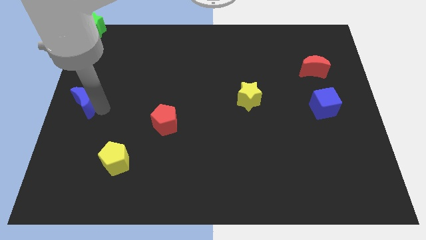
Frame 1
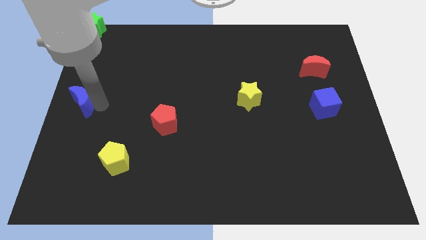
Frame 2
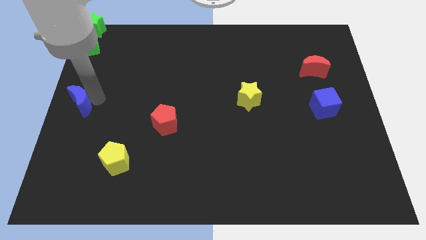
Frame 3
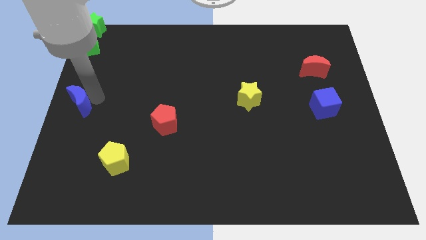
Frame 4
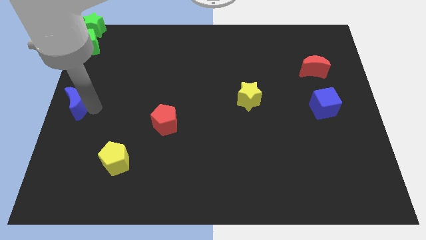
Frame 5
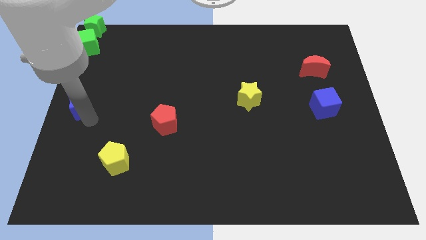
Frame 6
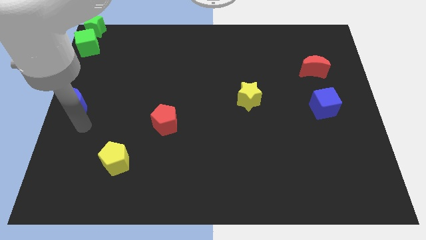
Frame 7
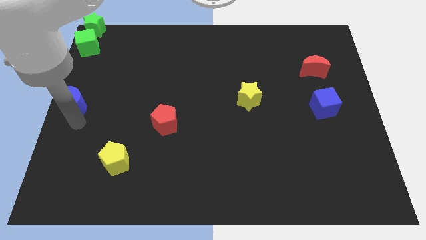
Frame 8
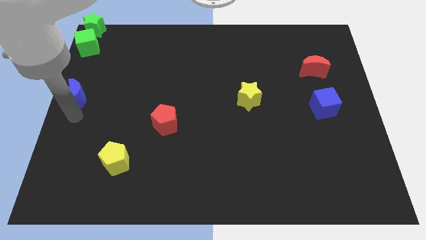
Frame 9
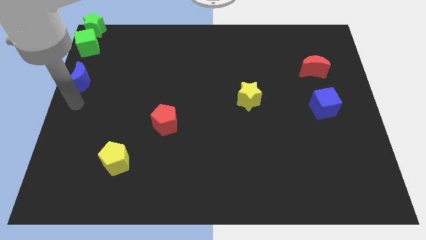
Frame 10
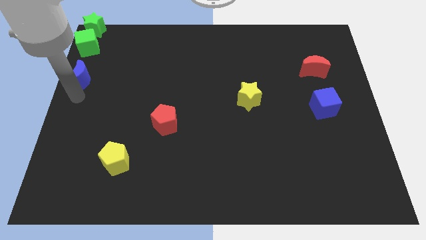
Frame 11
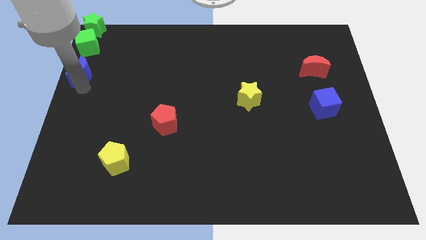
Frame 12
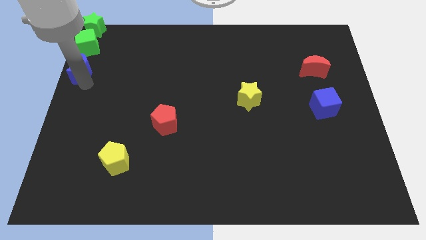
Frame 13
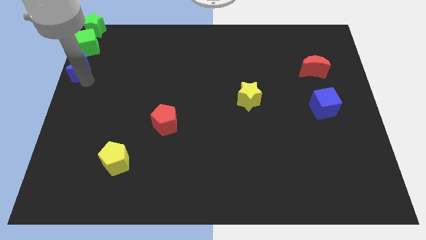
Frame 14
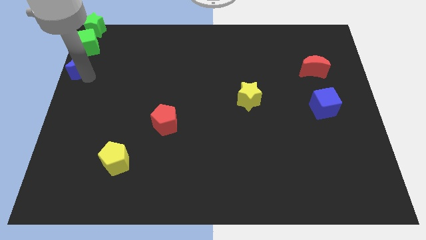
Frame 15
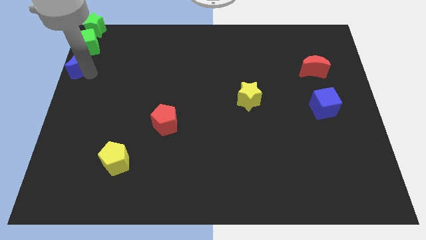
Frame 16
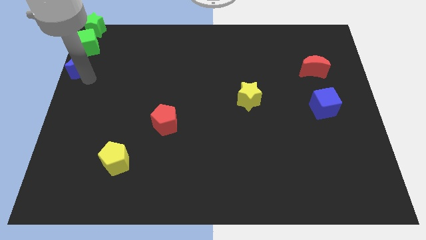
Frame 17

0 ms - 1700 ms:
place the blue crescent under the green cube

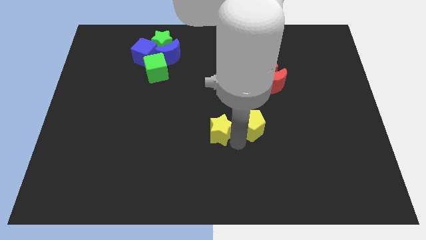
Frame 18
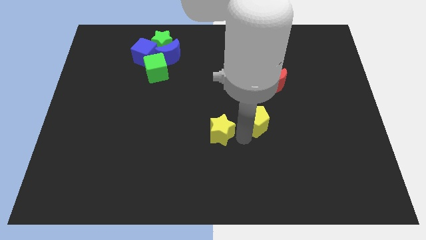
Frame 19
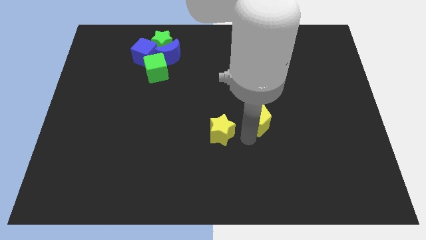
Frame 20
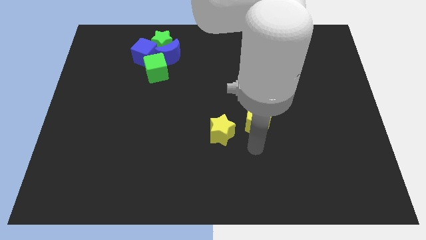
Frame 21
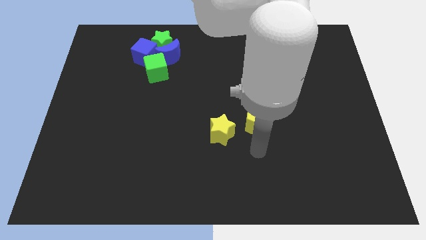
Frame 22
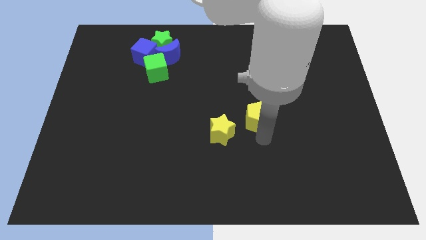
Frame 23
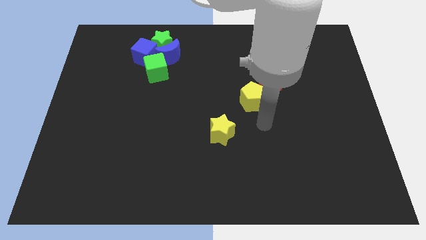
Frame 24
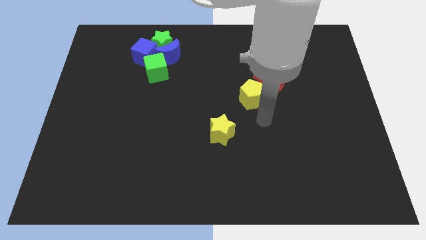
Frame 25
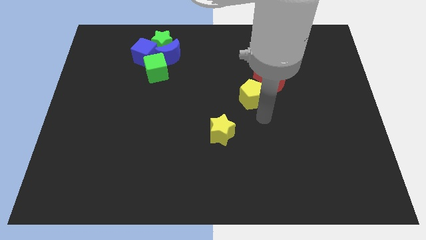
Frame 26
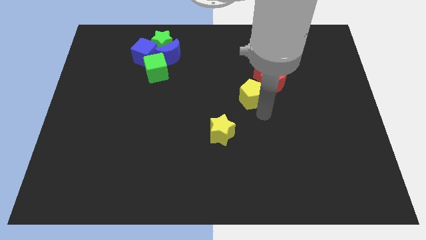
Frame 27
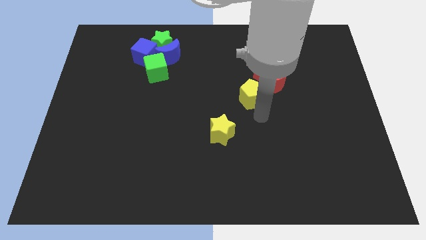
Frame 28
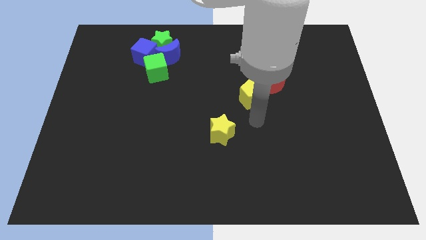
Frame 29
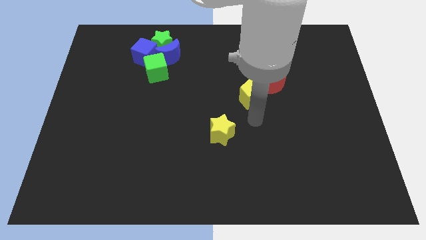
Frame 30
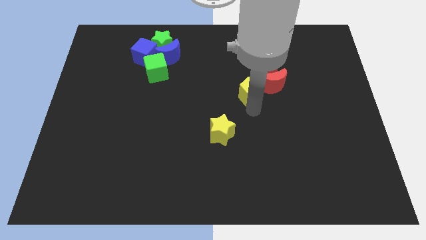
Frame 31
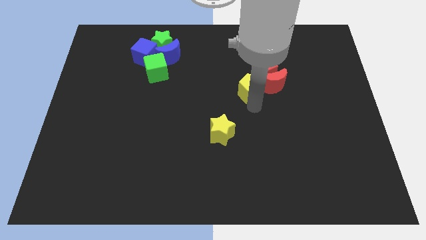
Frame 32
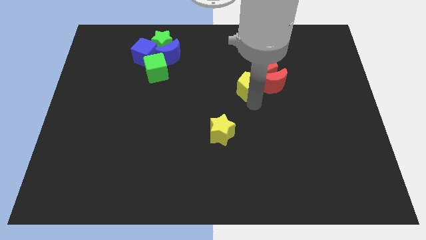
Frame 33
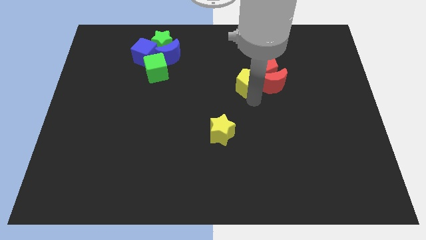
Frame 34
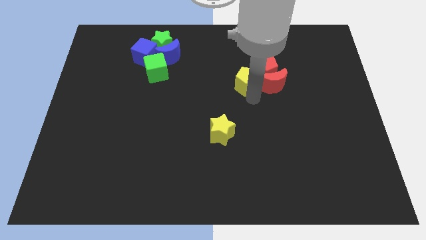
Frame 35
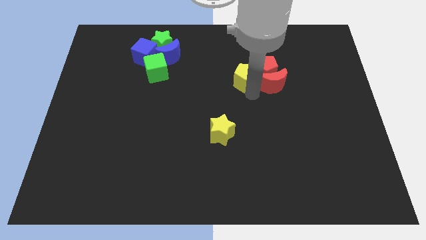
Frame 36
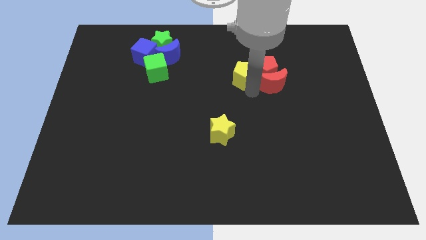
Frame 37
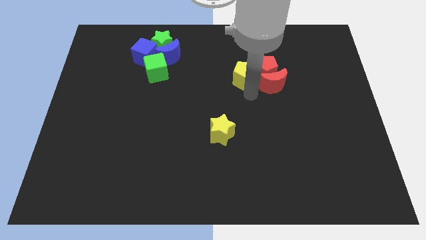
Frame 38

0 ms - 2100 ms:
put the yellow pentagon left to the red blocks

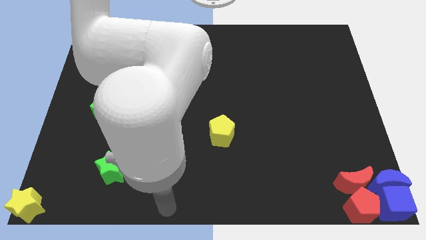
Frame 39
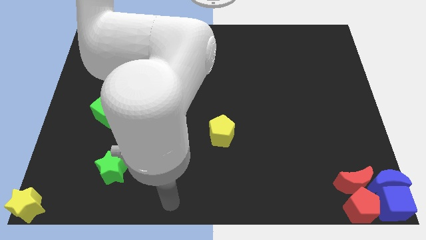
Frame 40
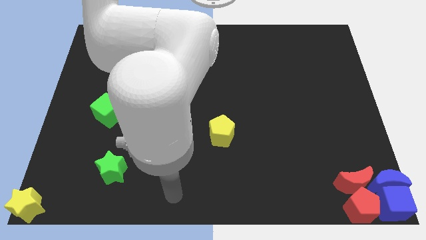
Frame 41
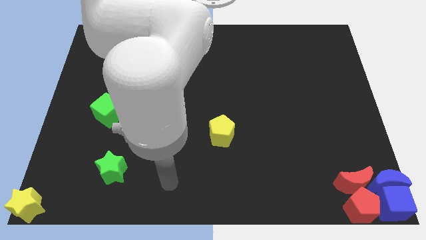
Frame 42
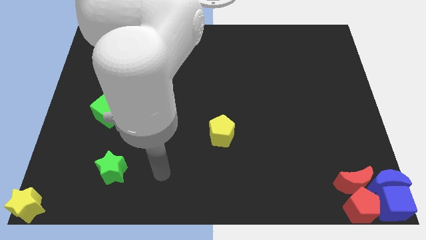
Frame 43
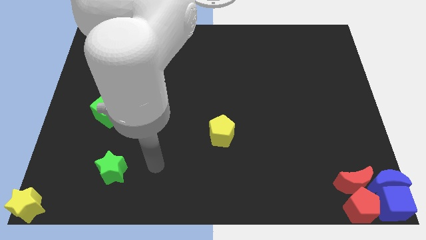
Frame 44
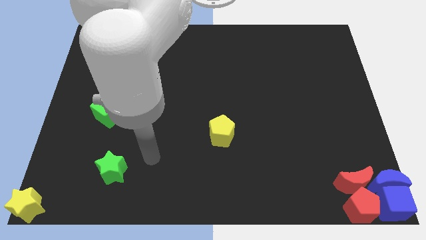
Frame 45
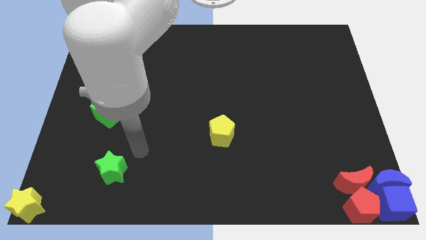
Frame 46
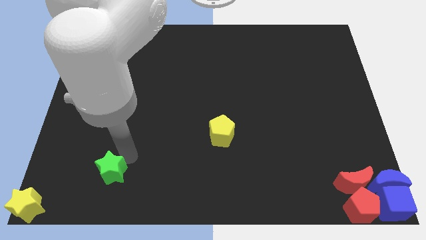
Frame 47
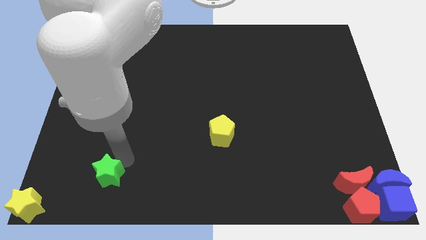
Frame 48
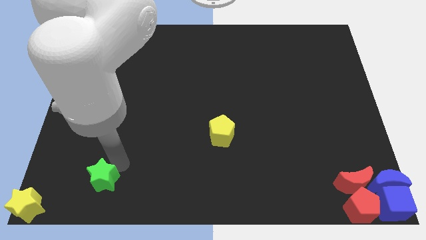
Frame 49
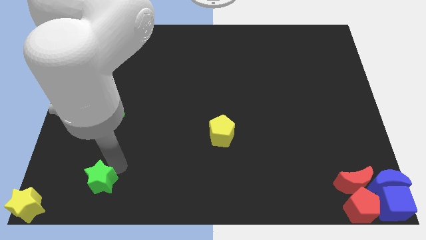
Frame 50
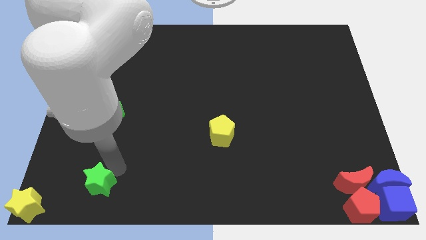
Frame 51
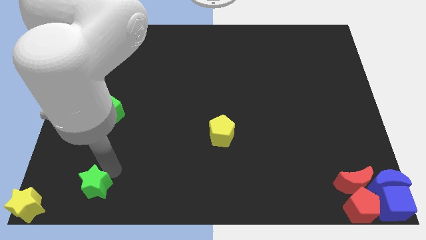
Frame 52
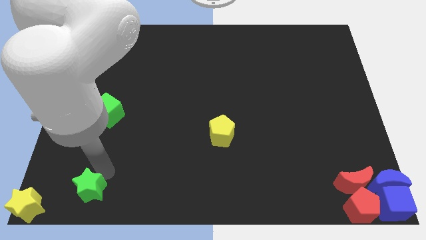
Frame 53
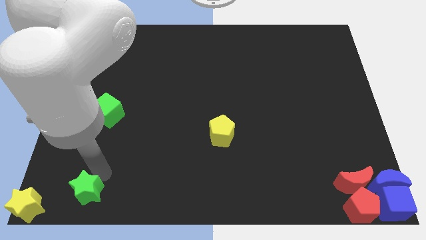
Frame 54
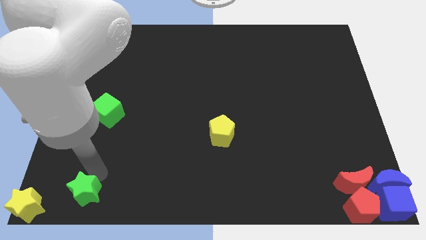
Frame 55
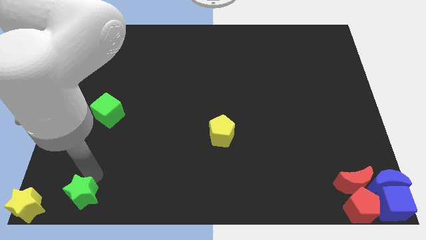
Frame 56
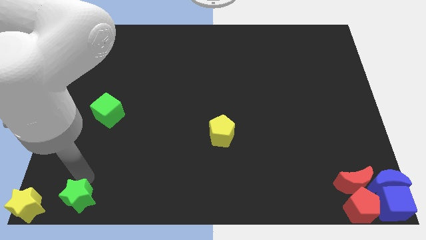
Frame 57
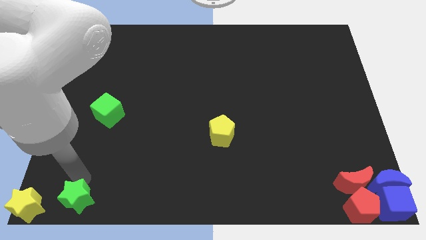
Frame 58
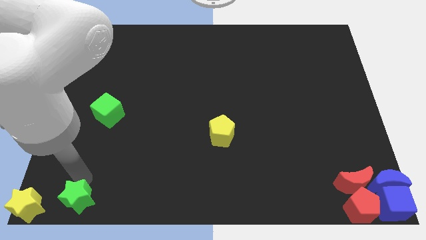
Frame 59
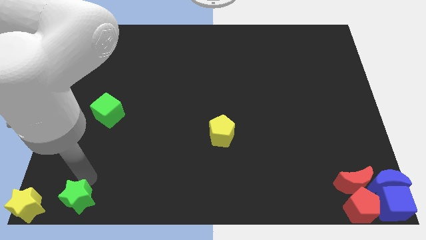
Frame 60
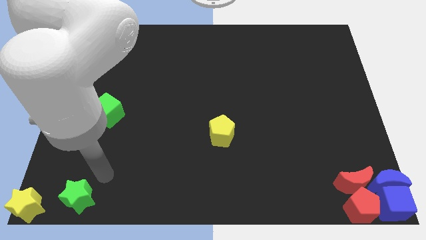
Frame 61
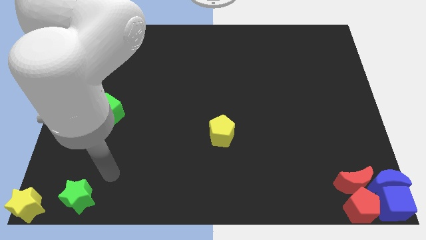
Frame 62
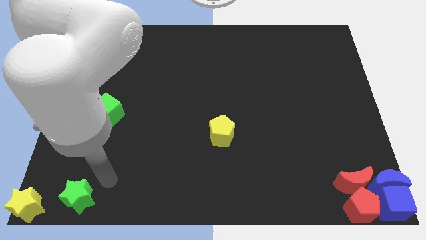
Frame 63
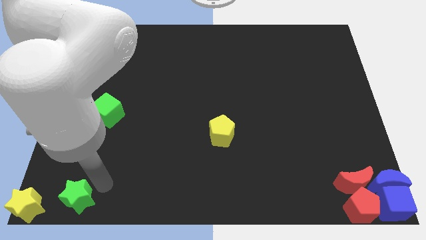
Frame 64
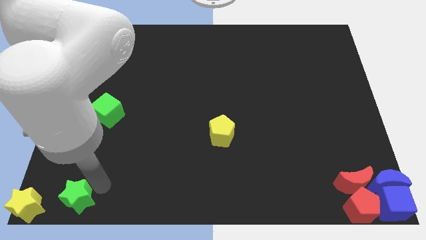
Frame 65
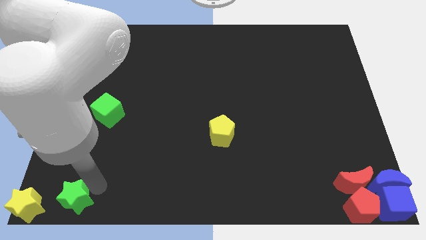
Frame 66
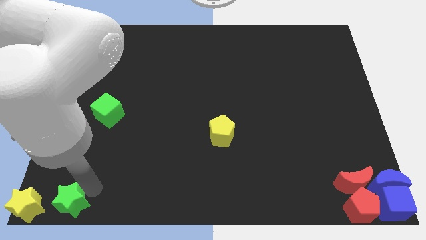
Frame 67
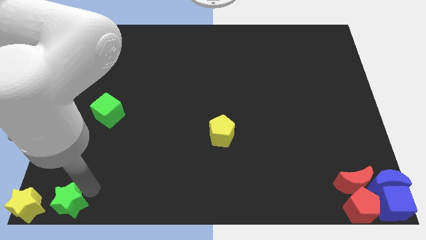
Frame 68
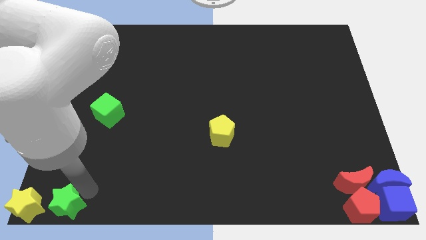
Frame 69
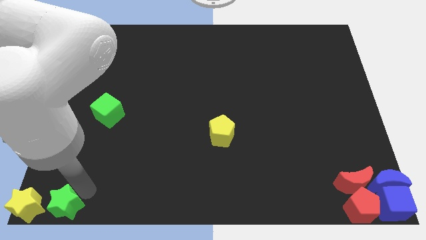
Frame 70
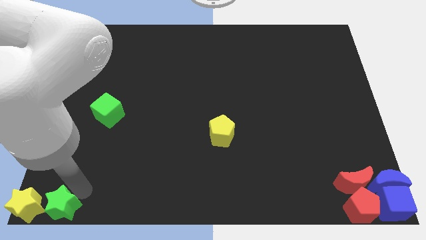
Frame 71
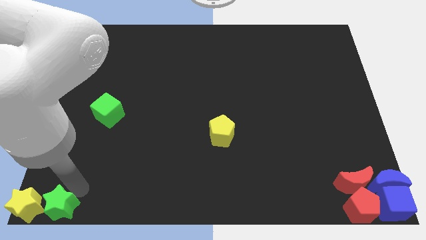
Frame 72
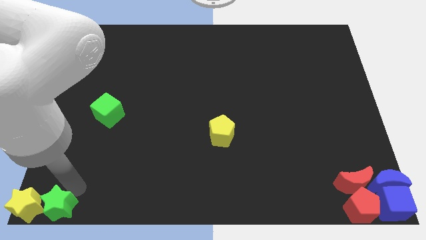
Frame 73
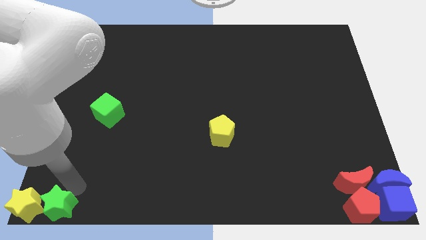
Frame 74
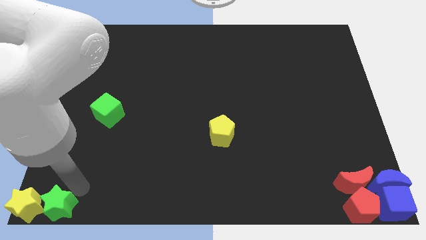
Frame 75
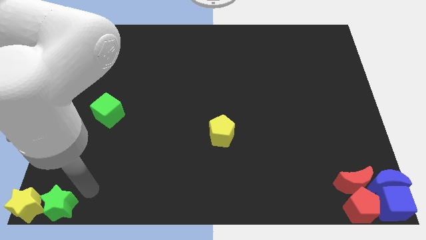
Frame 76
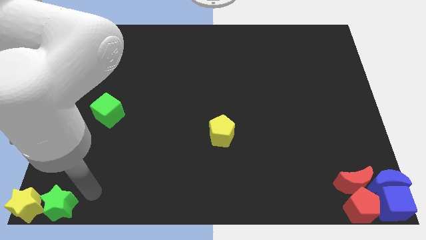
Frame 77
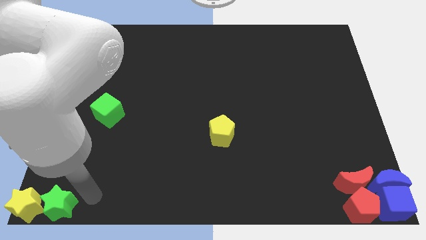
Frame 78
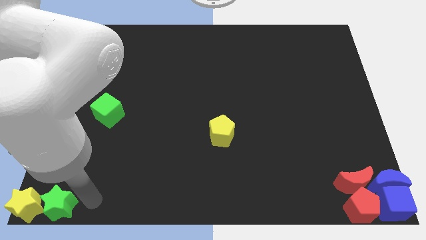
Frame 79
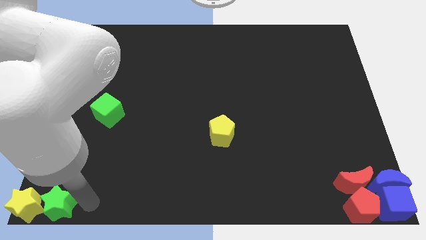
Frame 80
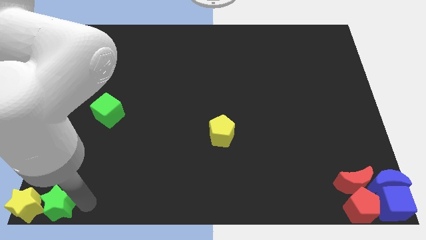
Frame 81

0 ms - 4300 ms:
push green star towards yellow star

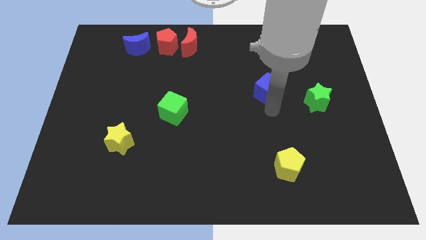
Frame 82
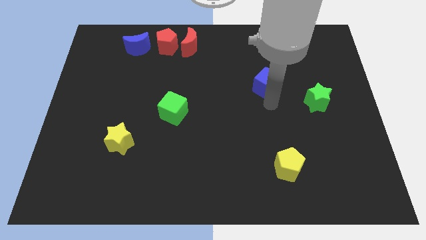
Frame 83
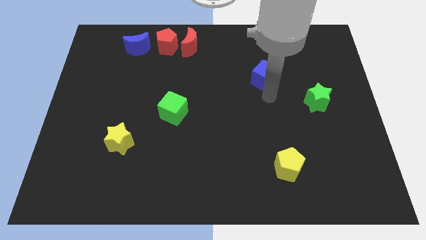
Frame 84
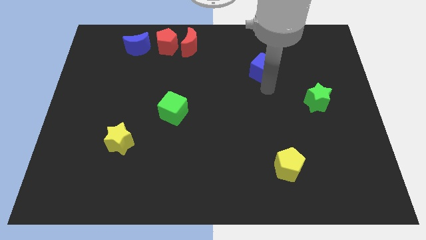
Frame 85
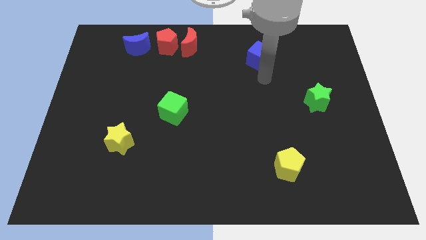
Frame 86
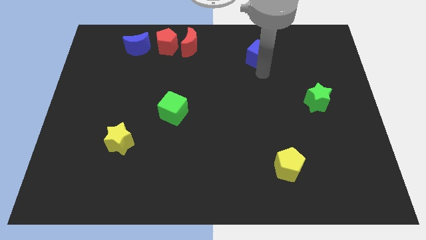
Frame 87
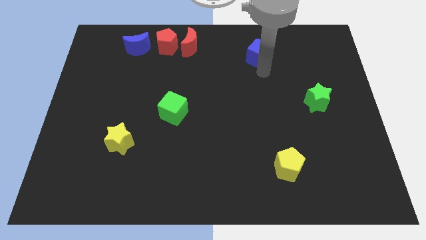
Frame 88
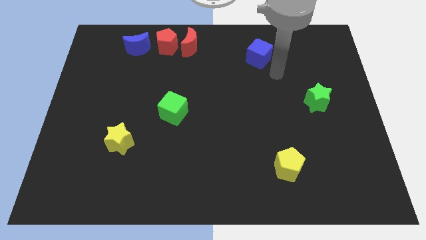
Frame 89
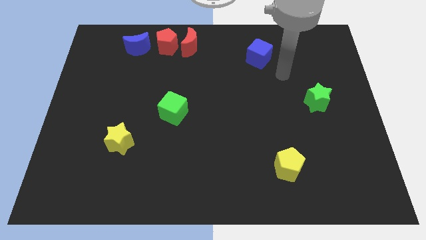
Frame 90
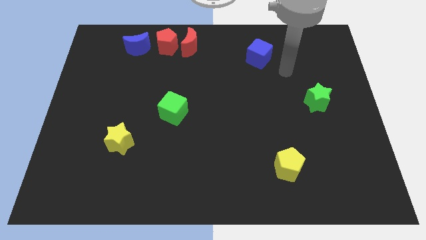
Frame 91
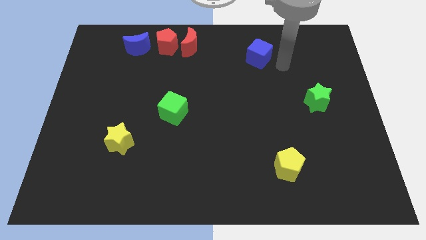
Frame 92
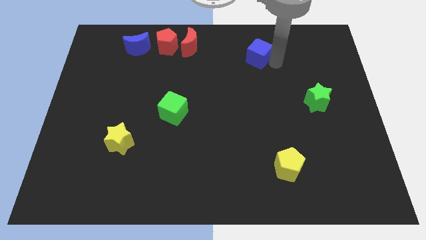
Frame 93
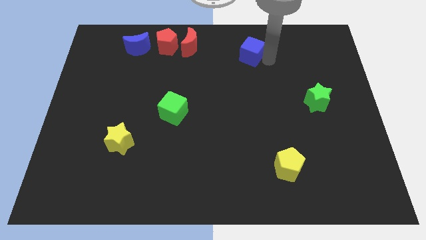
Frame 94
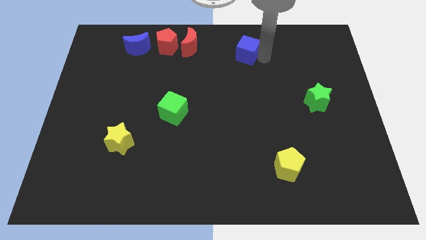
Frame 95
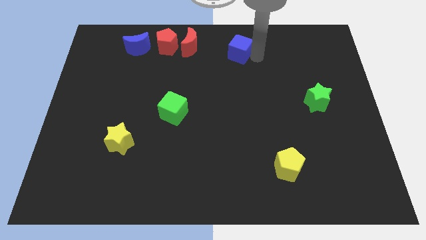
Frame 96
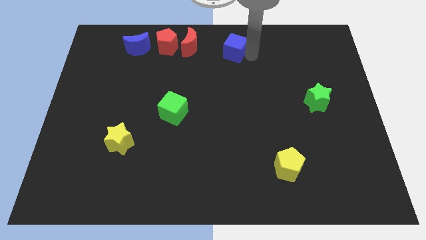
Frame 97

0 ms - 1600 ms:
push the blue cube towards the top of the board
